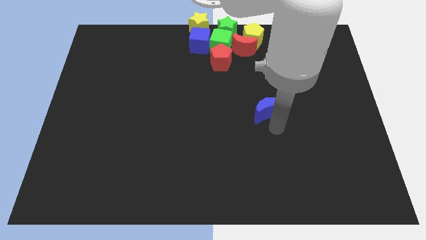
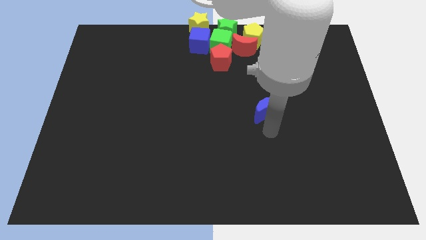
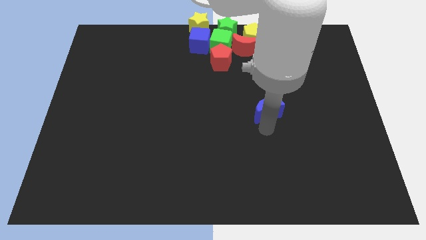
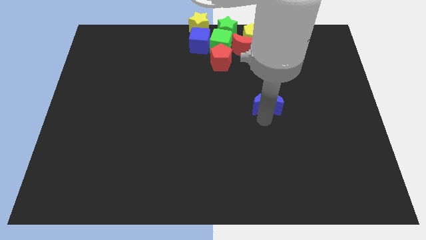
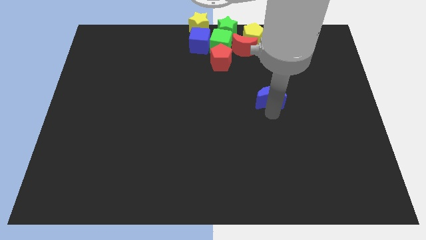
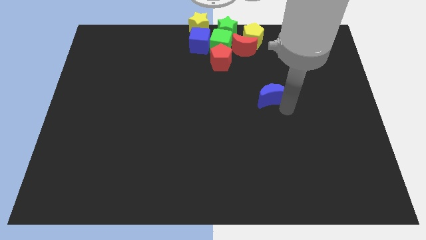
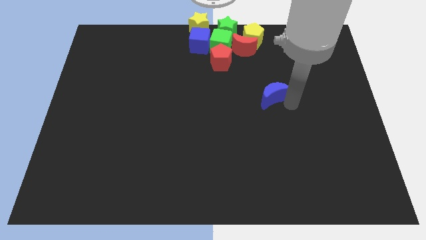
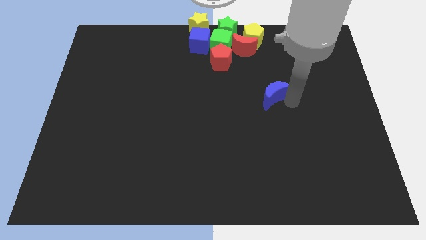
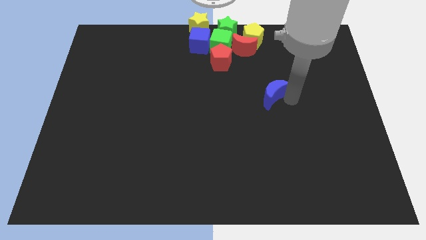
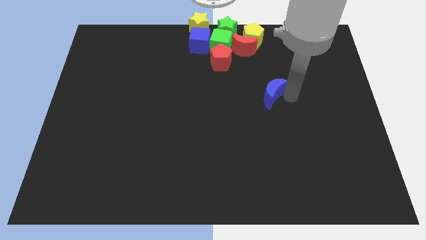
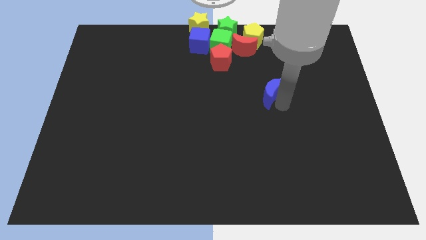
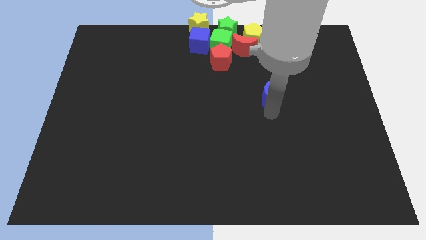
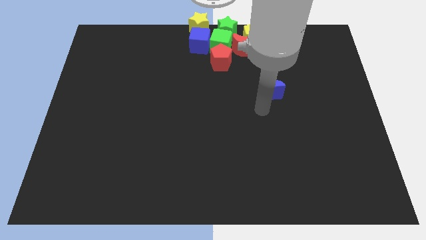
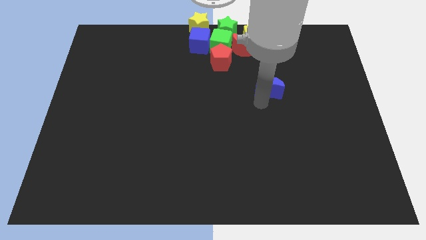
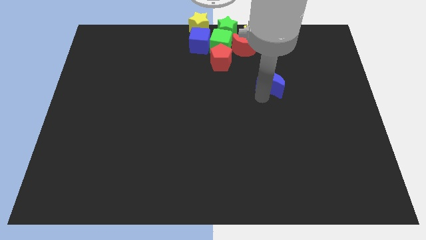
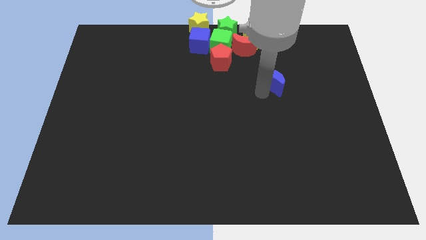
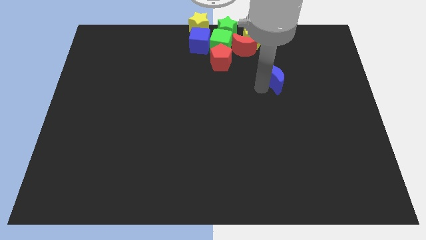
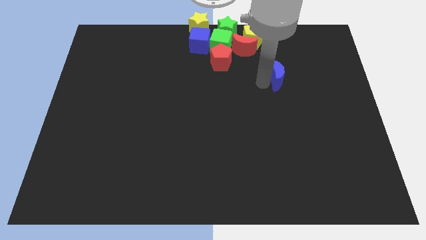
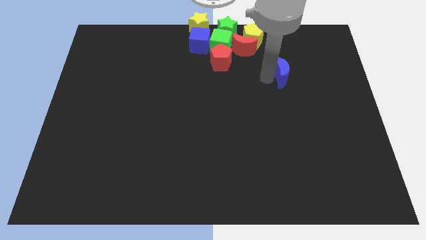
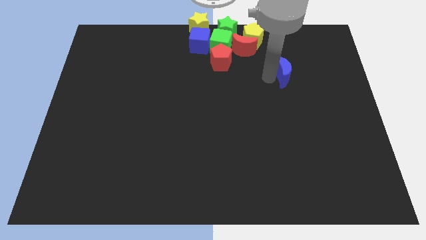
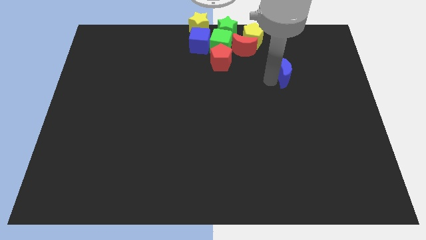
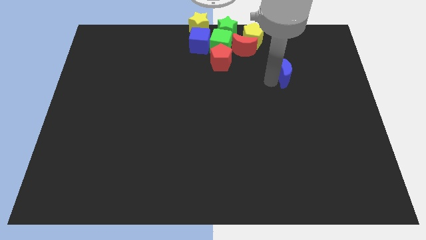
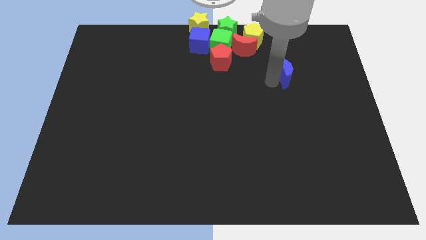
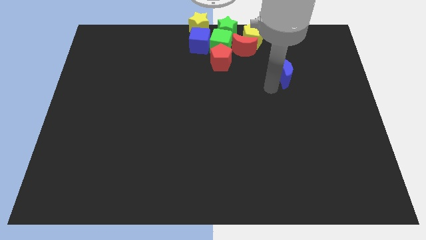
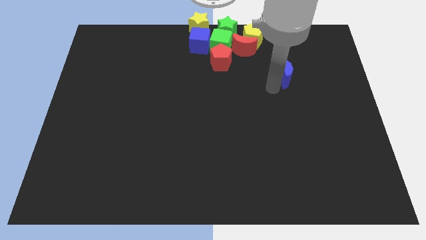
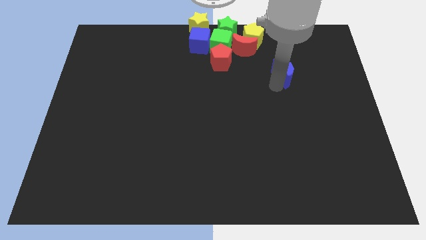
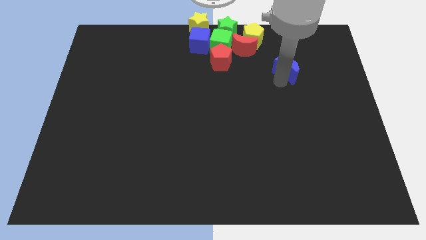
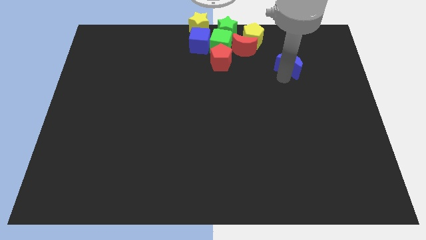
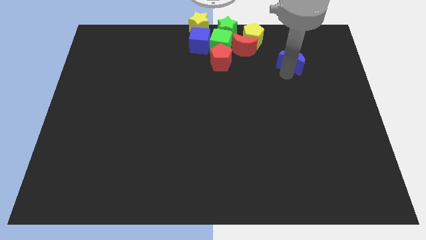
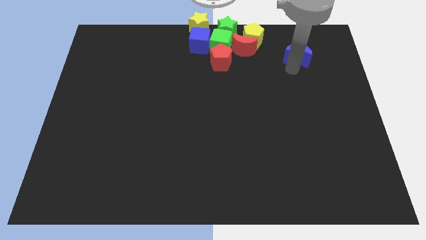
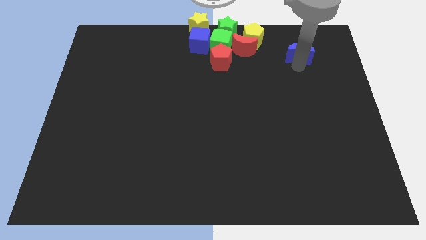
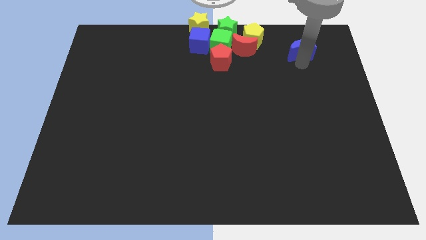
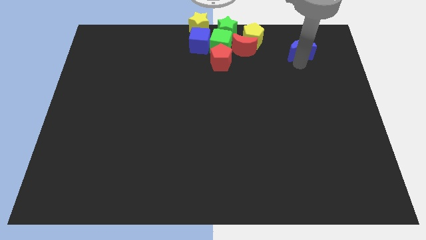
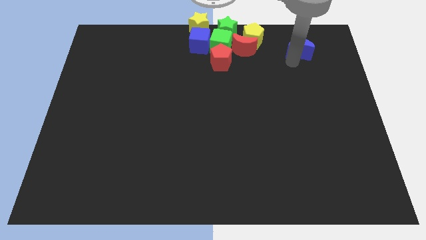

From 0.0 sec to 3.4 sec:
place blue moon to the right of red moon

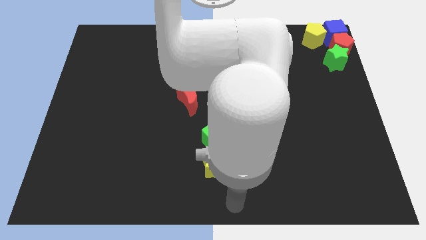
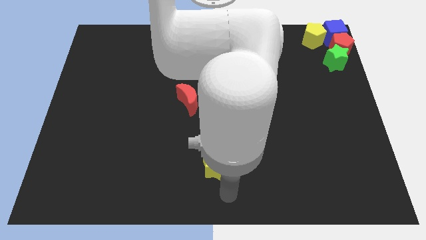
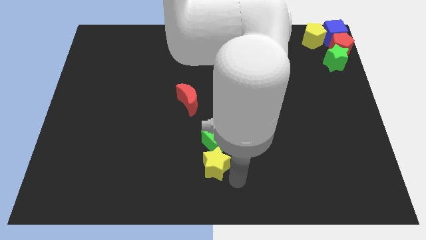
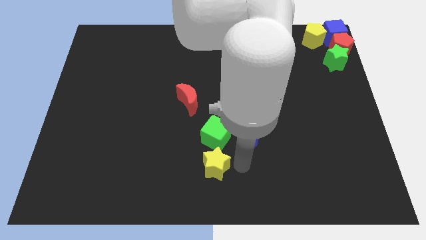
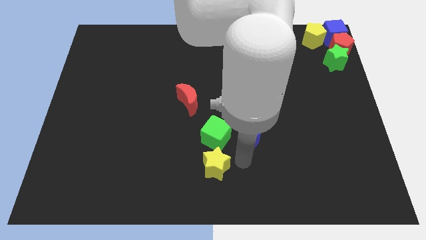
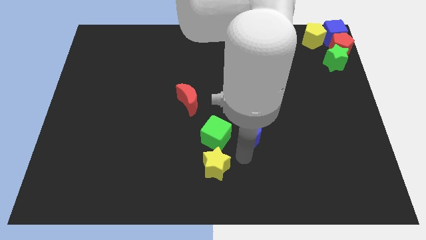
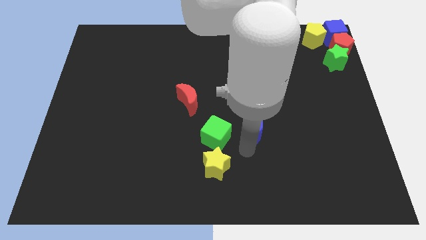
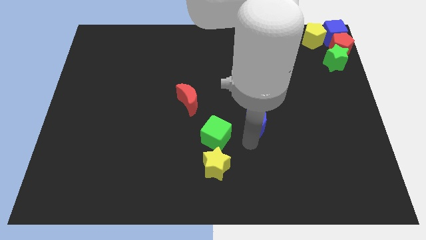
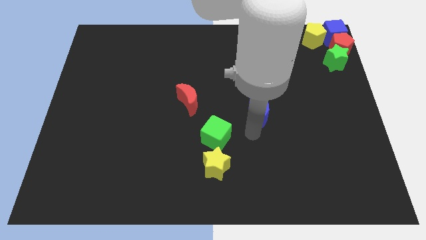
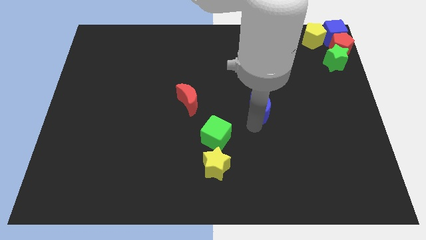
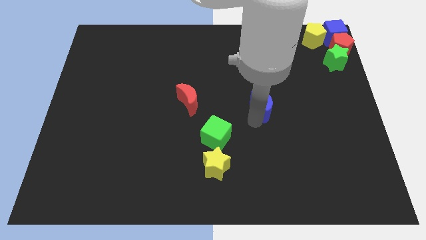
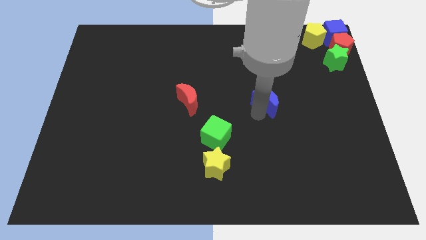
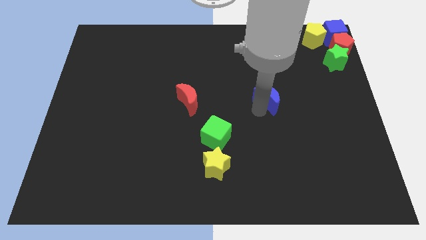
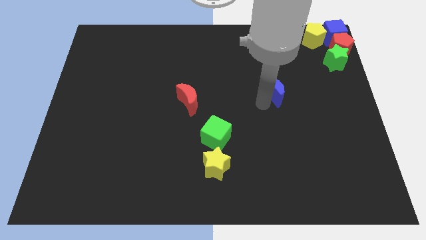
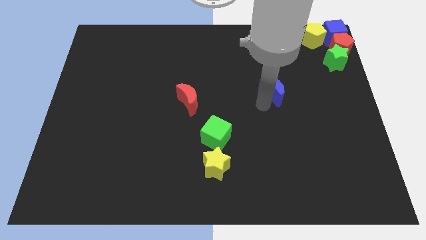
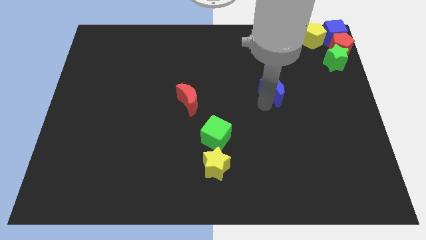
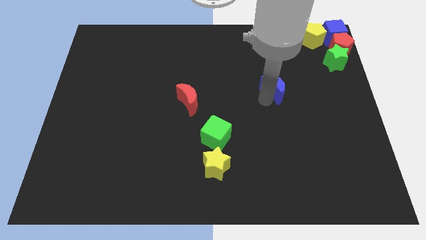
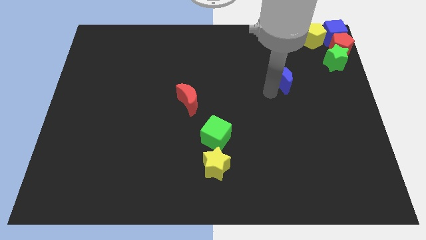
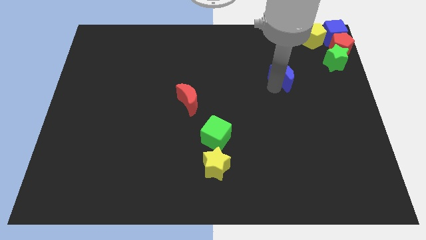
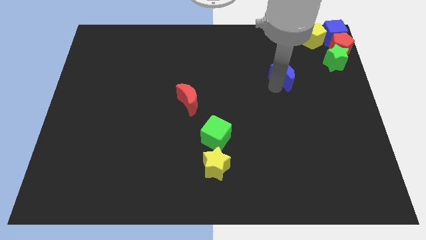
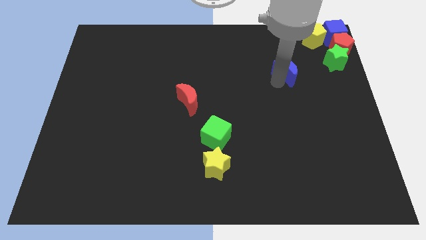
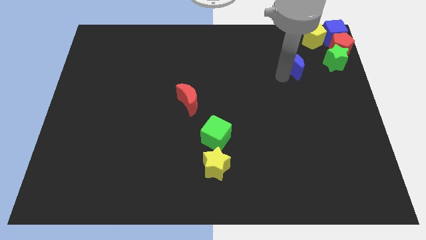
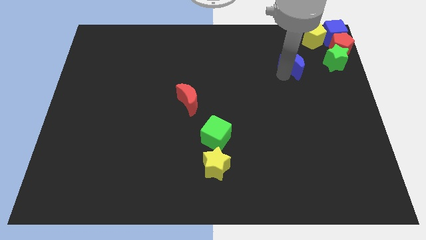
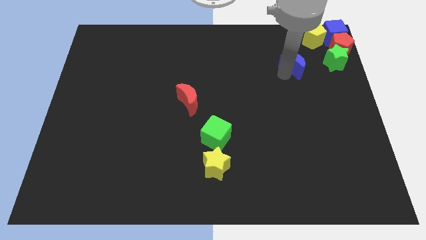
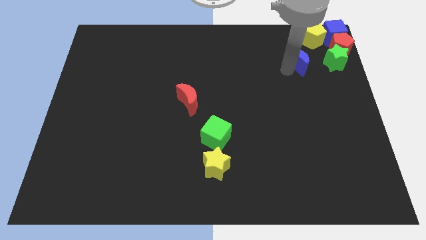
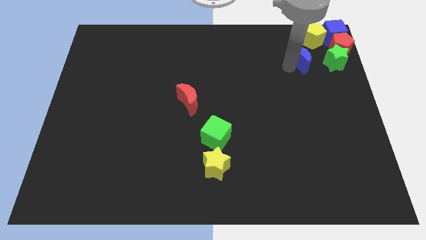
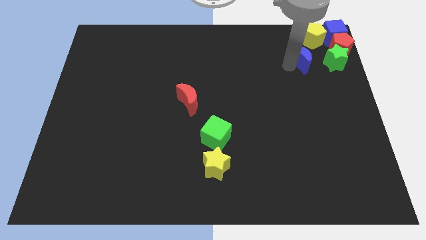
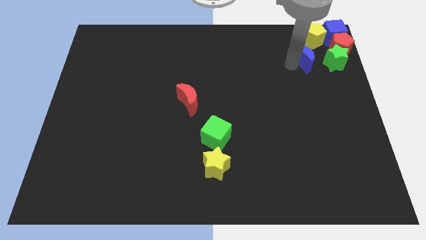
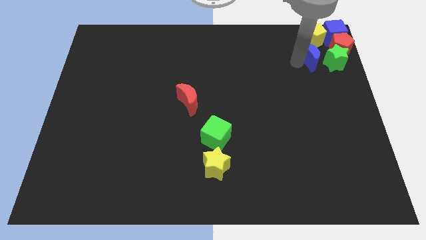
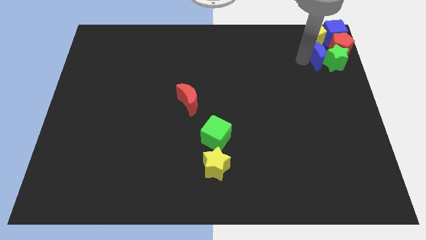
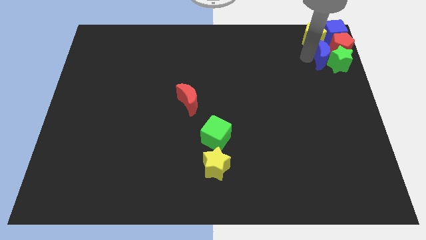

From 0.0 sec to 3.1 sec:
drag the blue crescent towards the top right corner

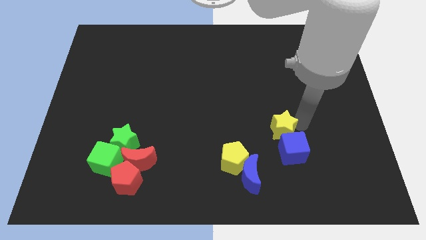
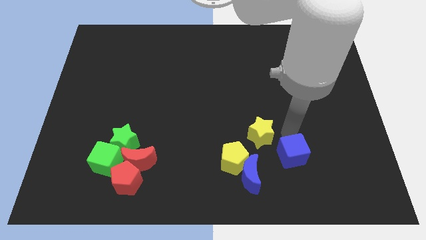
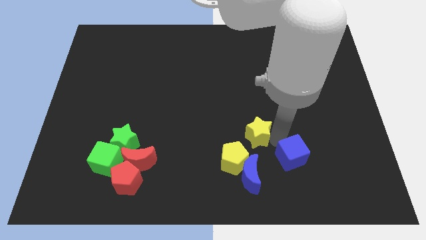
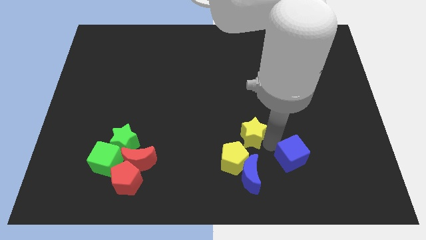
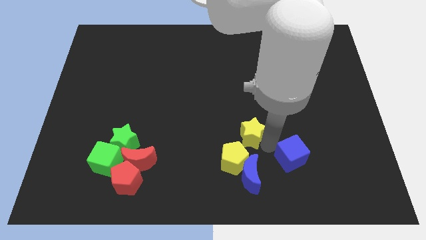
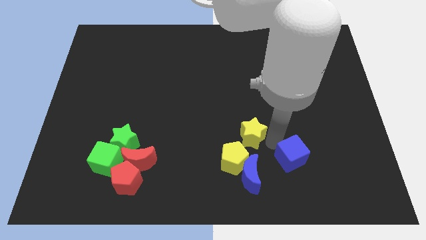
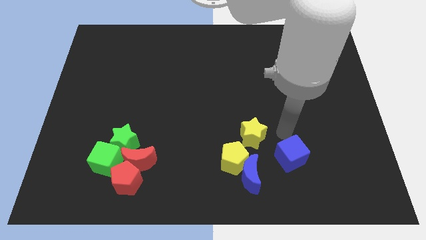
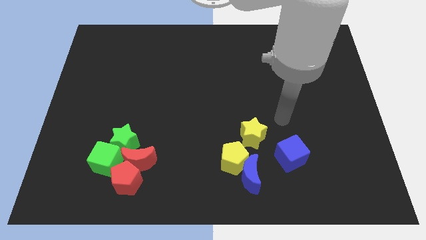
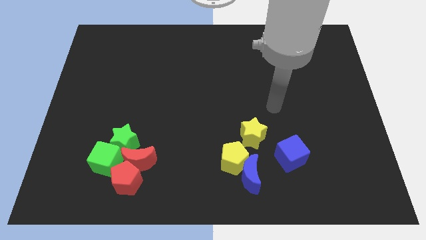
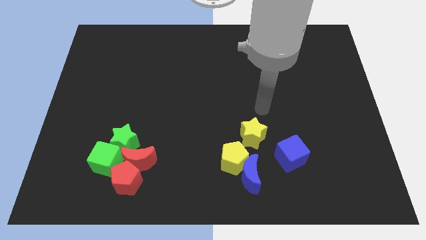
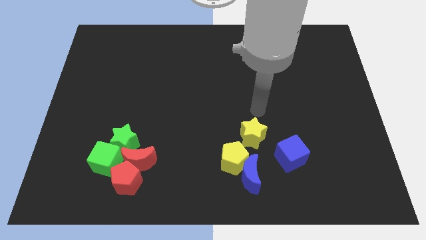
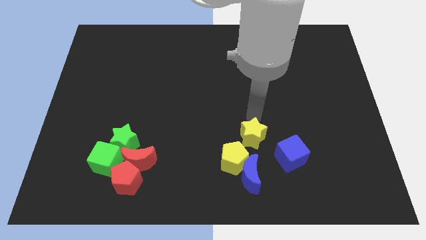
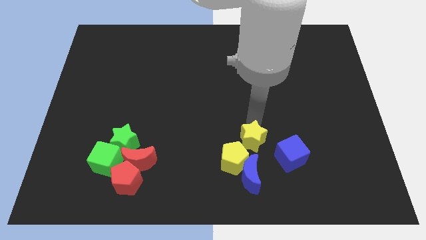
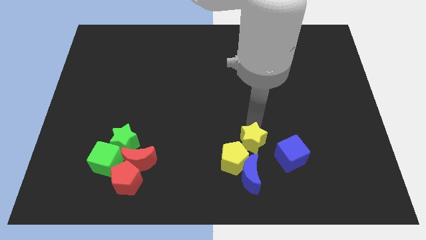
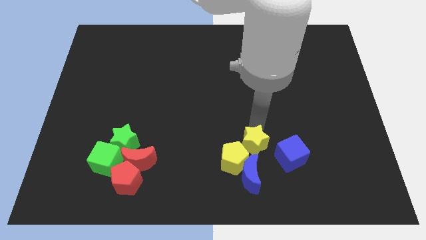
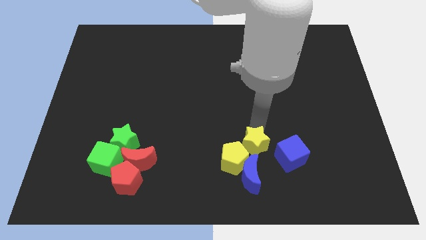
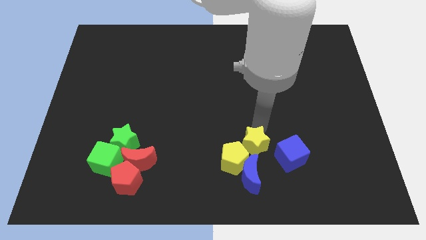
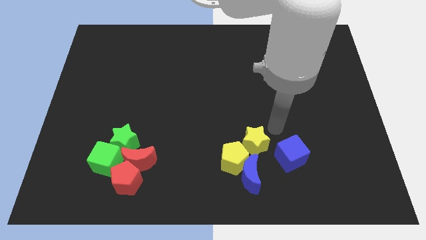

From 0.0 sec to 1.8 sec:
move the yellow star diagonally above to the yellow pentagon

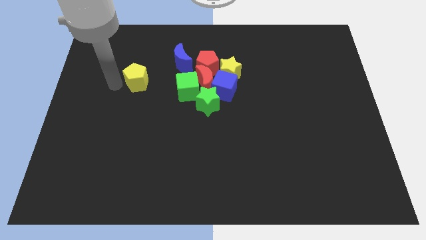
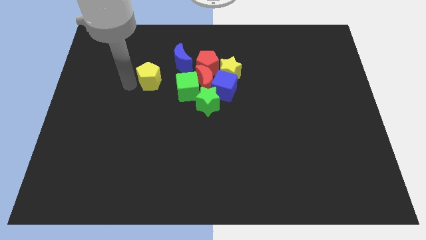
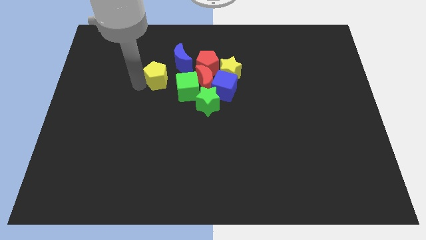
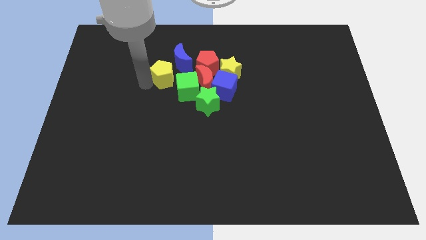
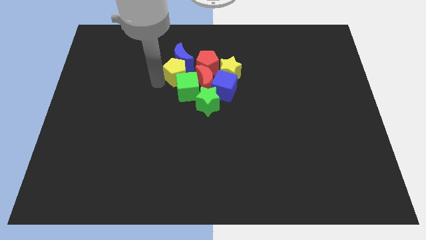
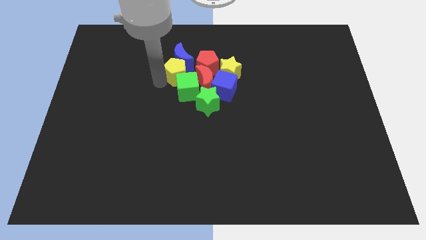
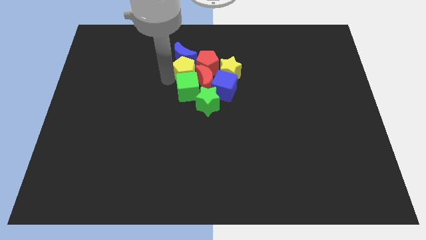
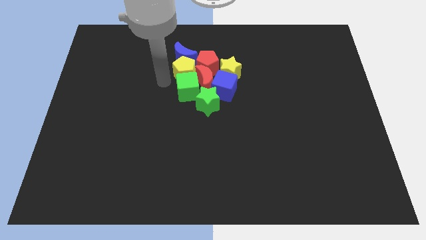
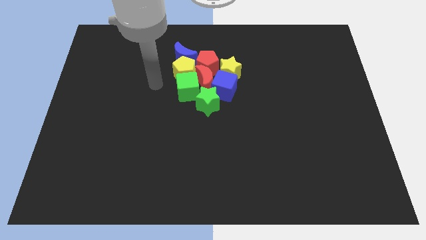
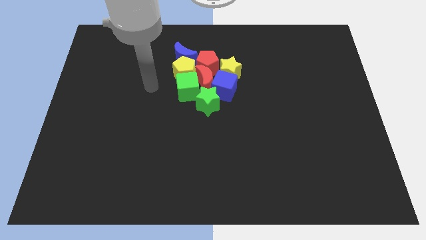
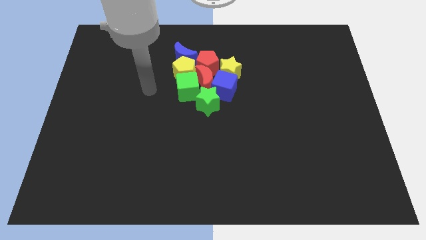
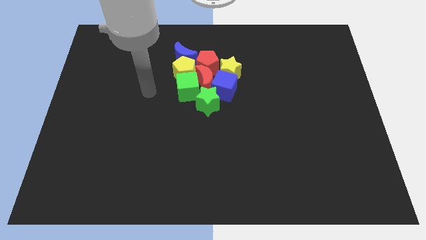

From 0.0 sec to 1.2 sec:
move the yellow pentagon to the group of blocks
